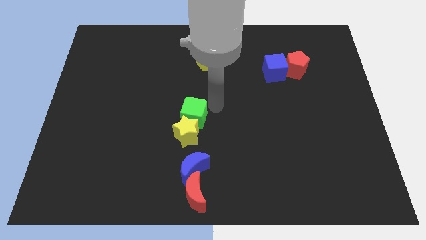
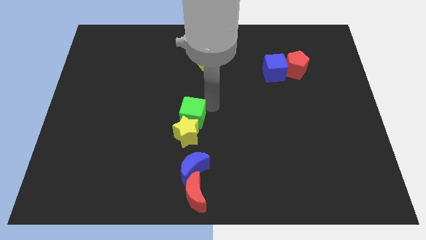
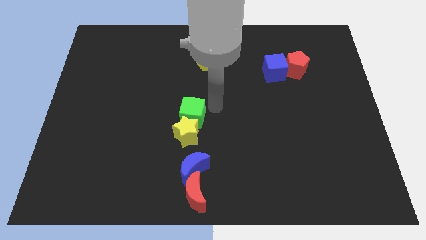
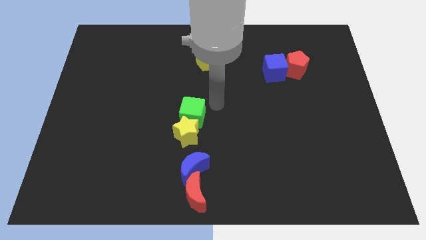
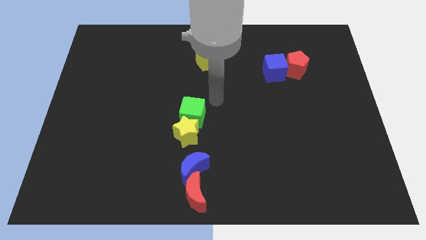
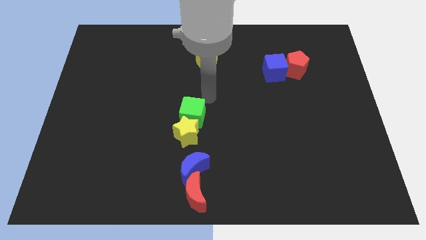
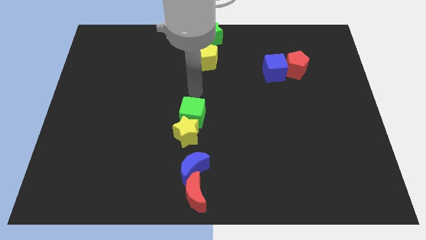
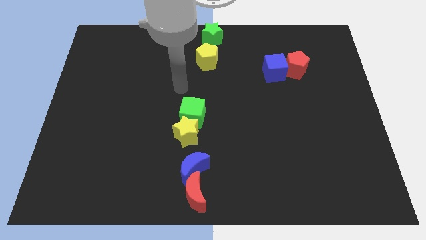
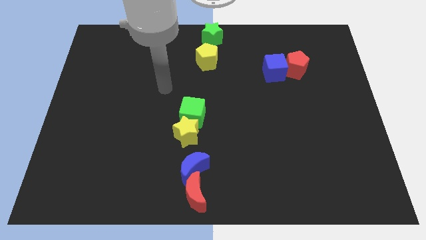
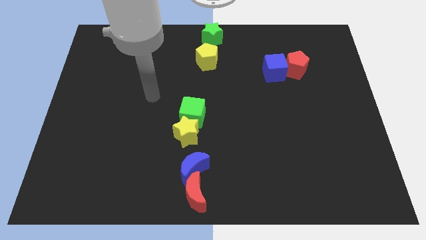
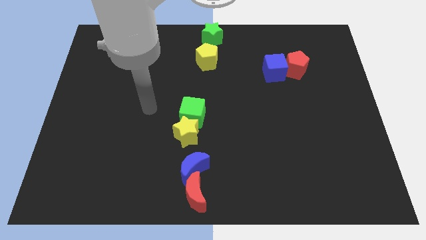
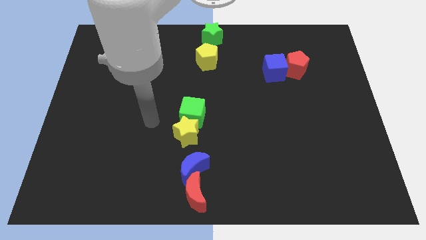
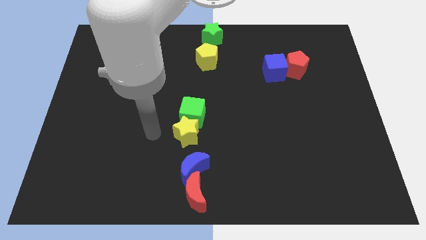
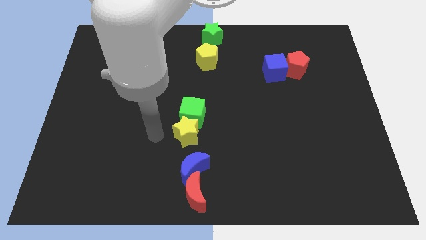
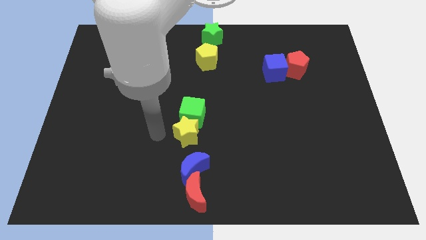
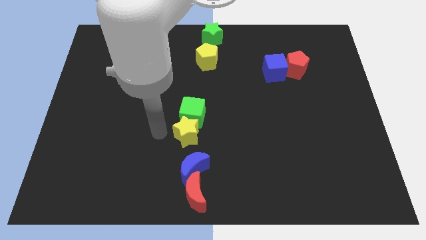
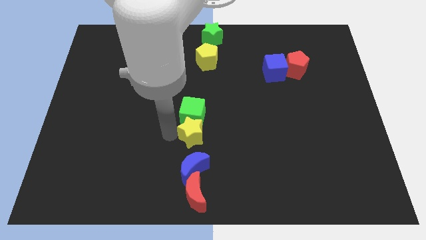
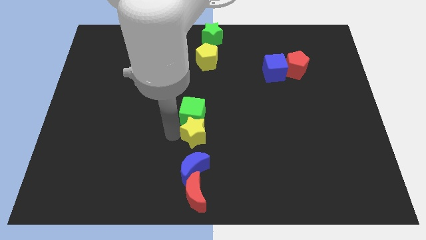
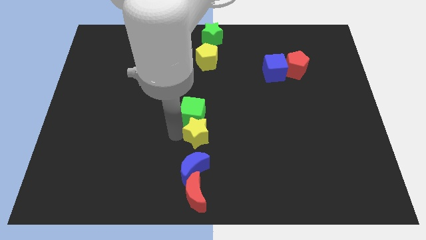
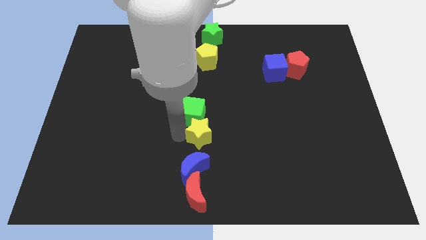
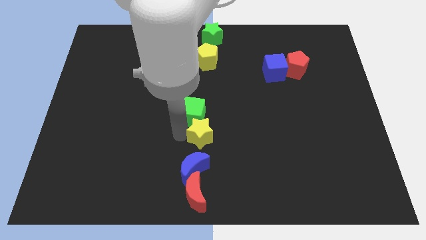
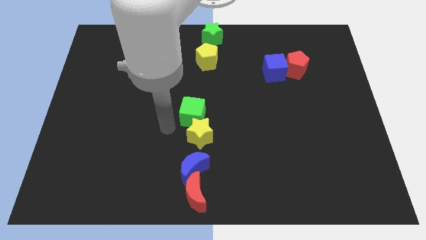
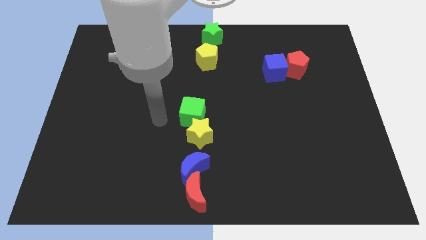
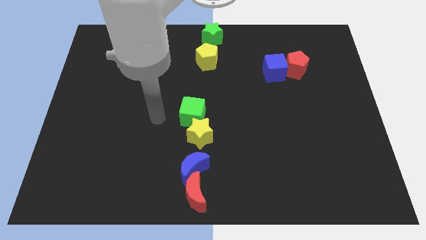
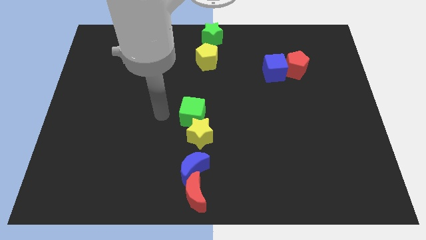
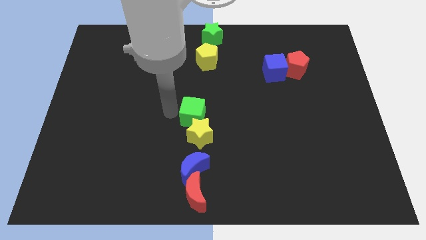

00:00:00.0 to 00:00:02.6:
move yellow star slightly towards right

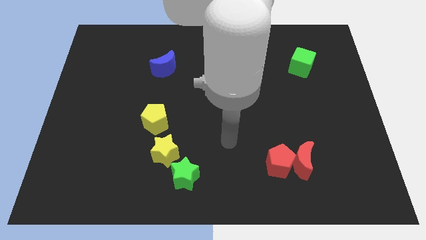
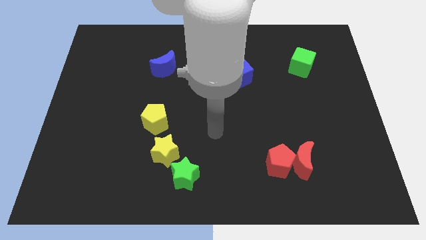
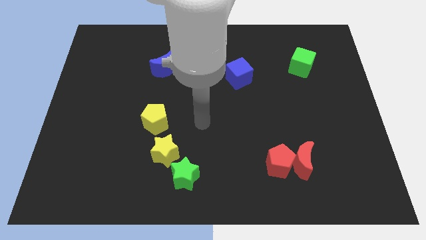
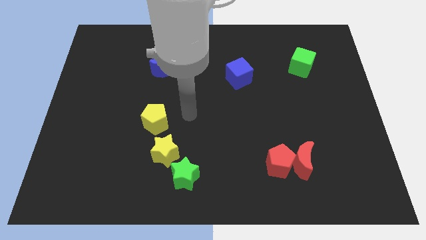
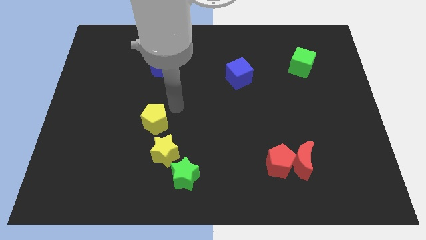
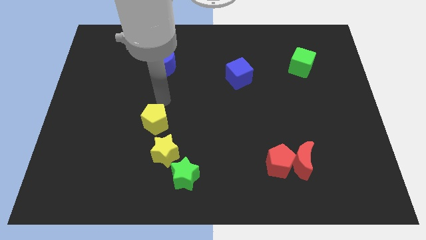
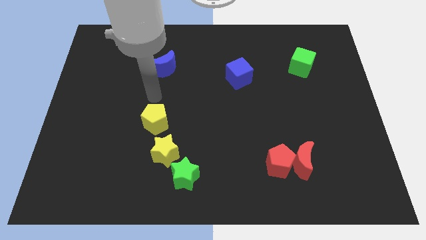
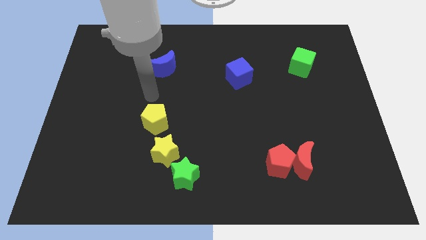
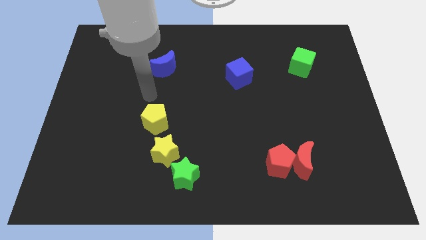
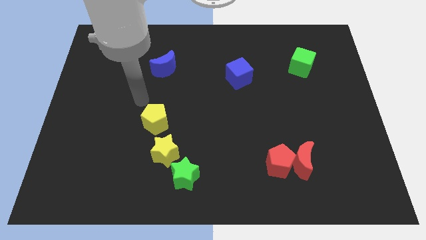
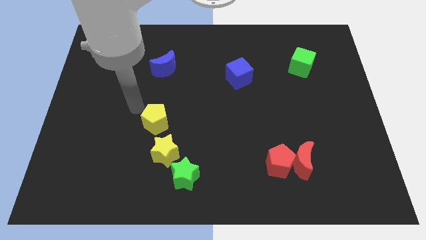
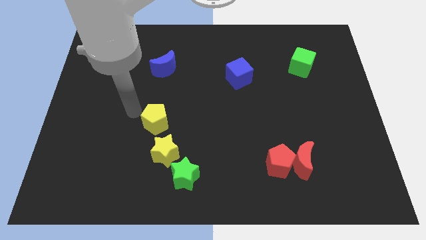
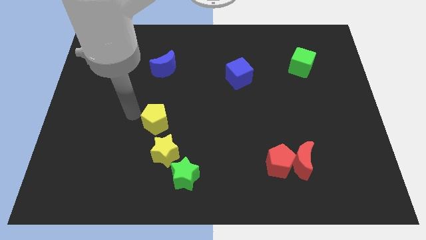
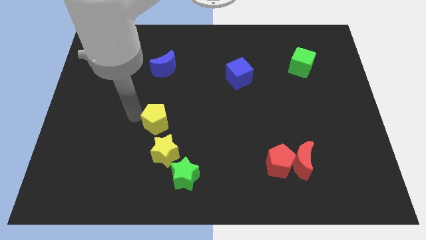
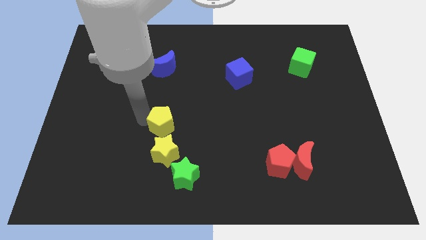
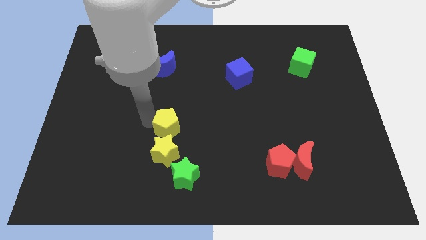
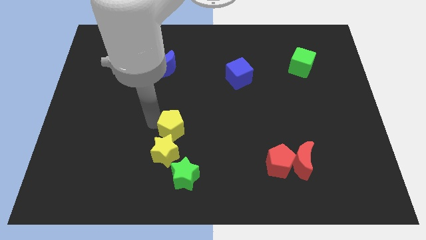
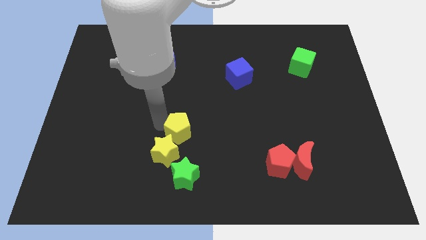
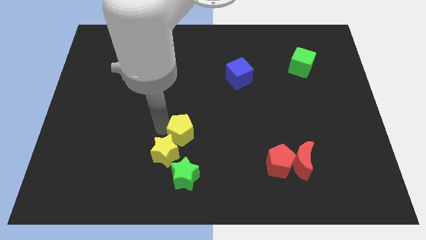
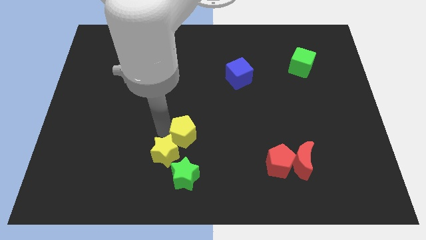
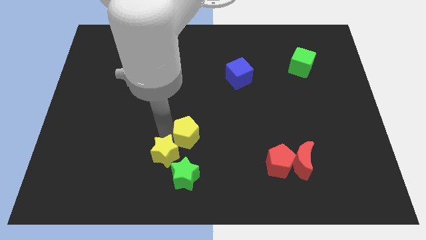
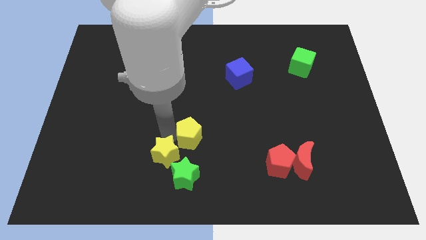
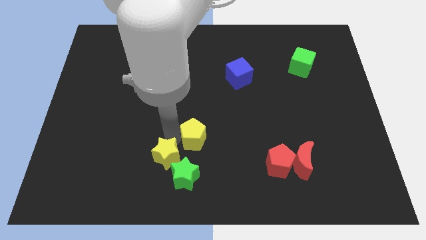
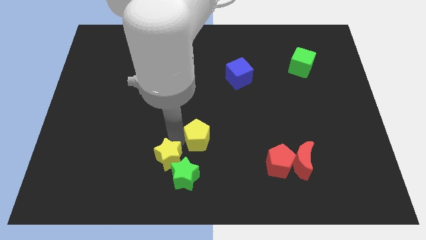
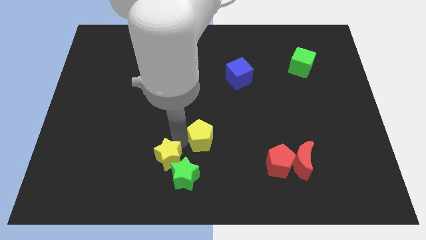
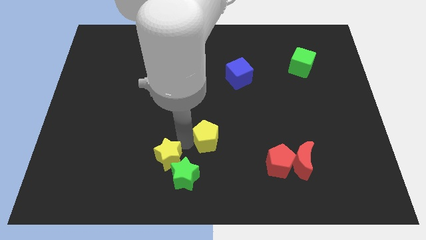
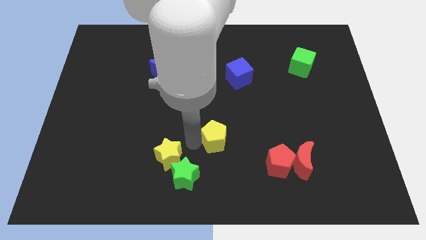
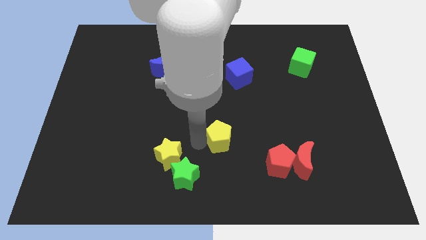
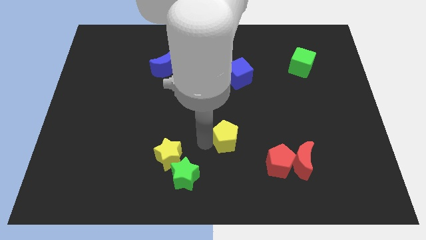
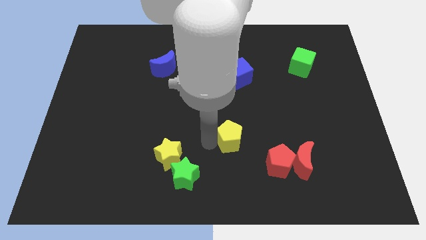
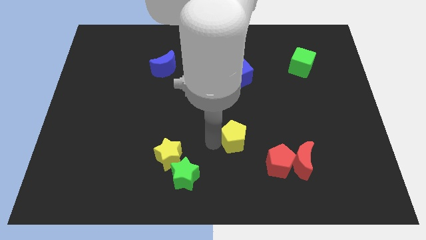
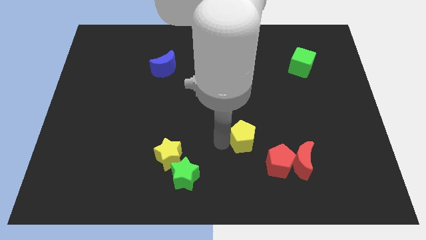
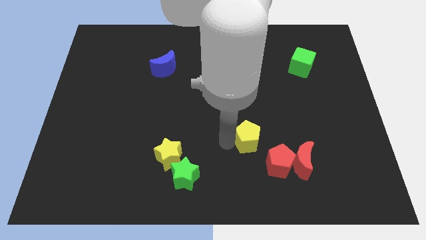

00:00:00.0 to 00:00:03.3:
move yellow pentagon towards the red blocks

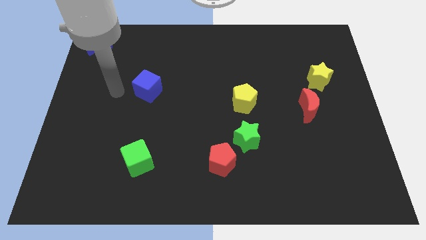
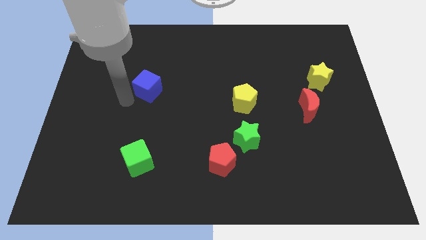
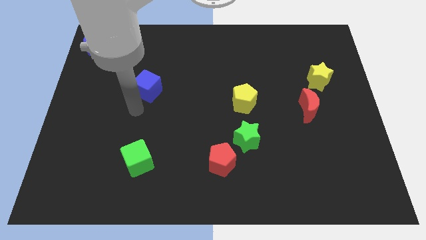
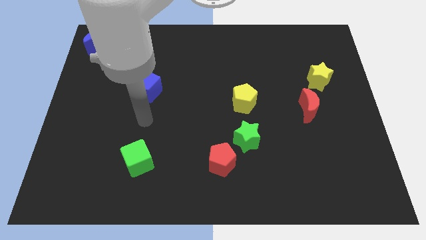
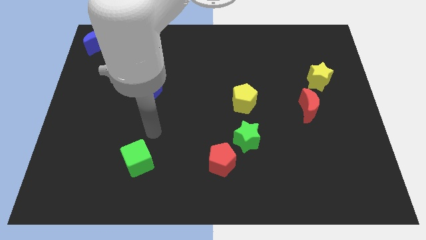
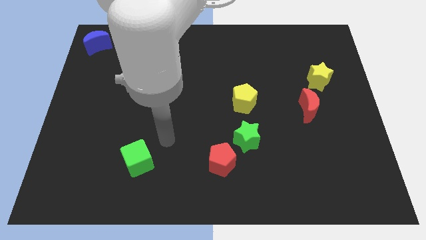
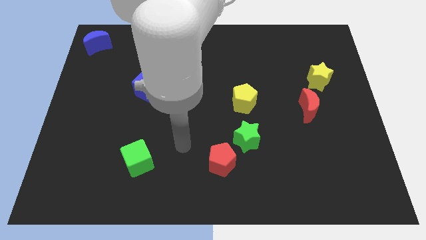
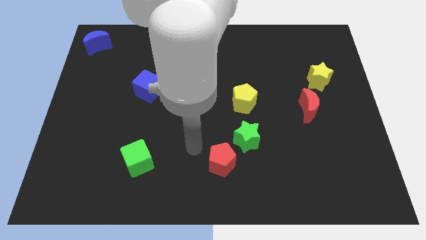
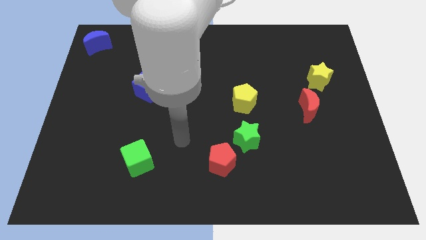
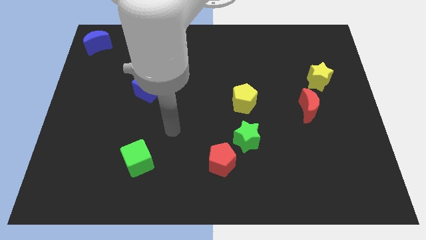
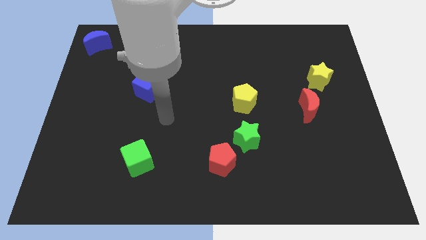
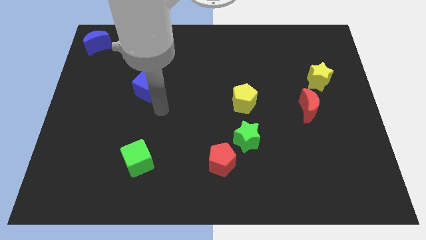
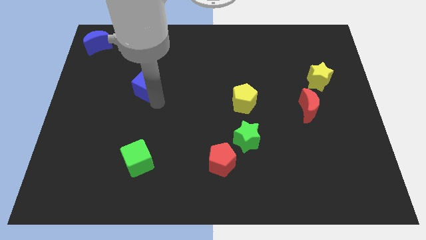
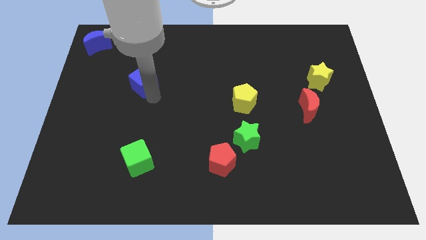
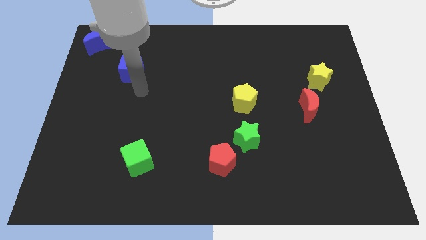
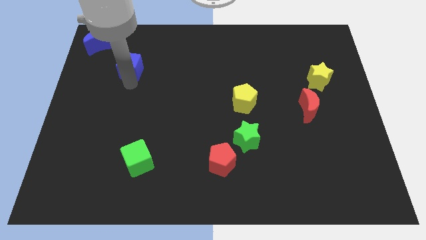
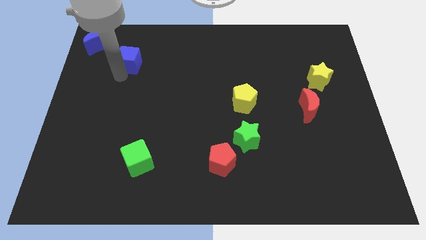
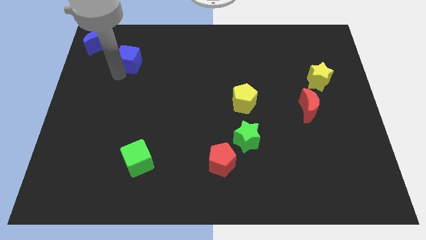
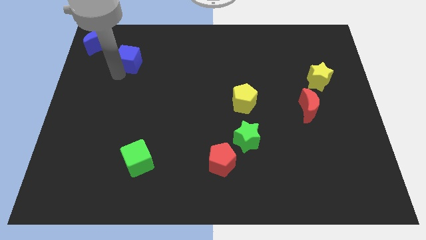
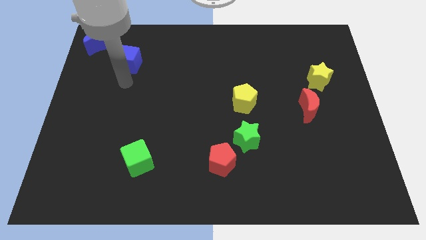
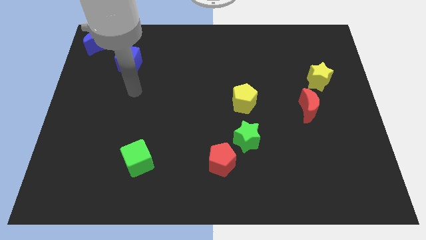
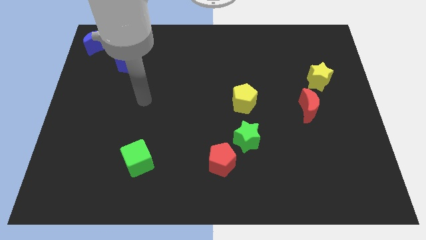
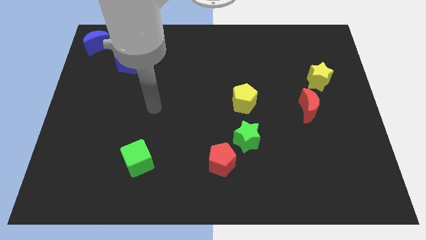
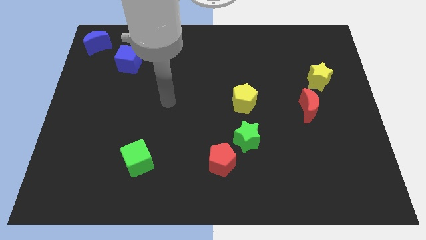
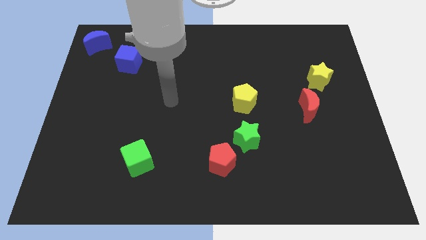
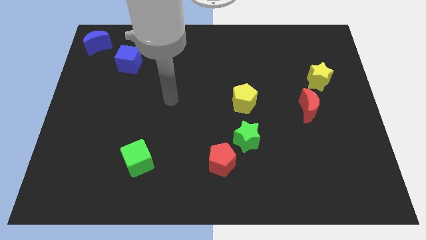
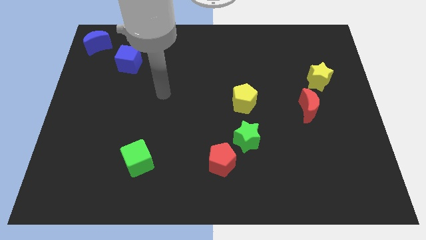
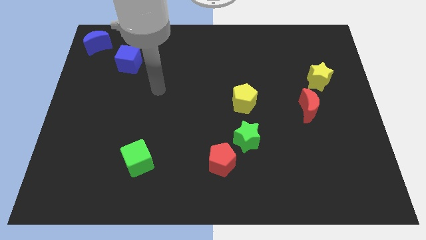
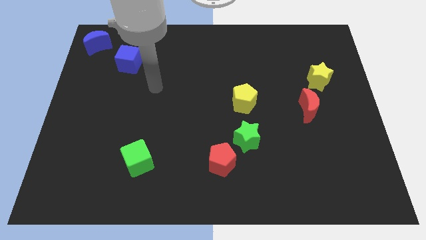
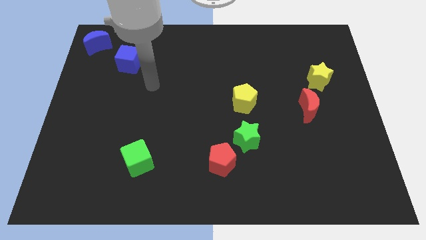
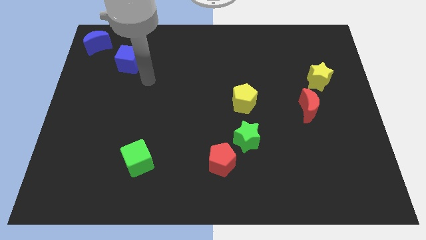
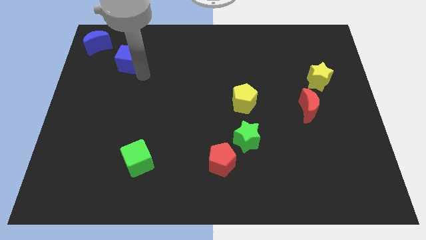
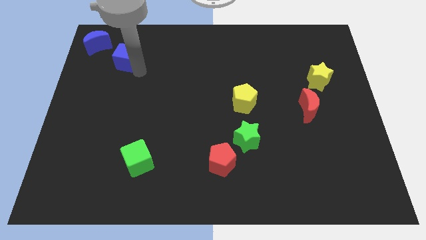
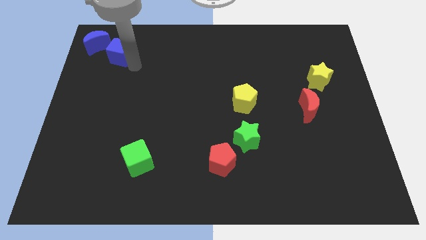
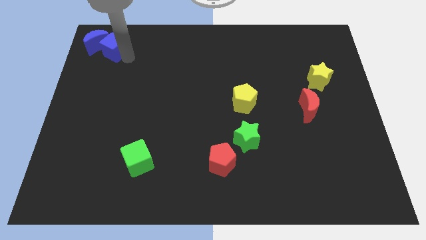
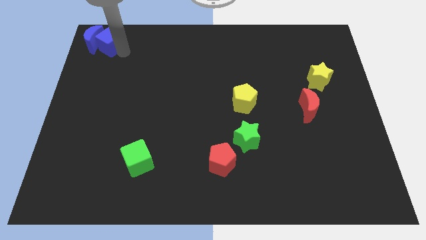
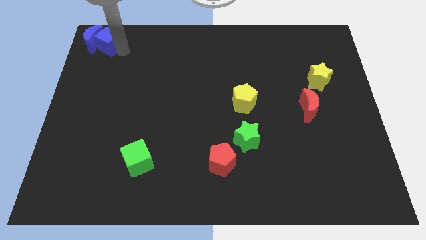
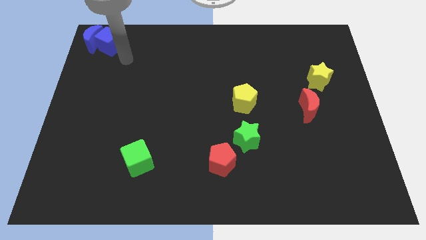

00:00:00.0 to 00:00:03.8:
push the blue cube to the right of blue moon
